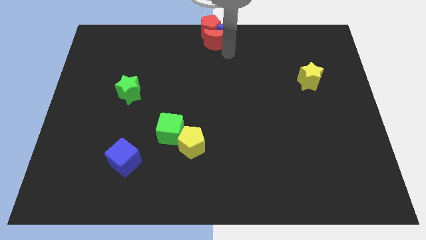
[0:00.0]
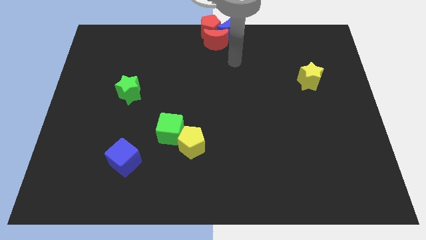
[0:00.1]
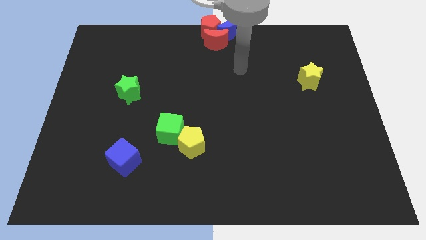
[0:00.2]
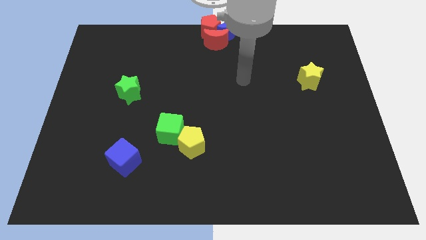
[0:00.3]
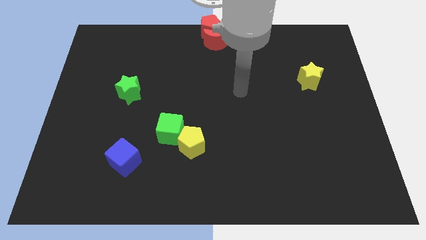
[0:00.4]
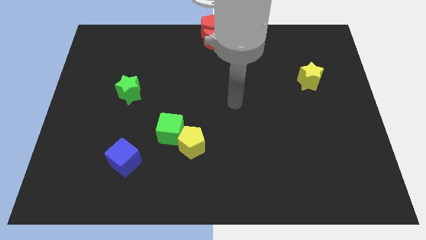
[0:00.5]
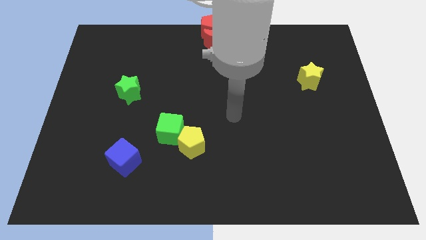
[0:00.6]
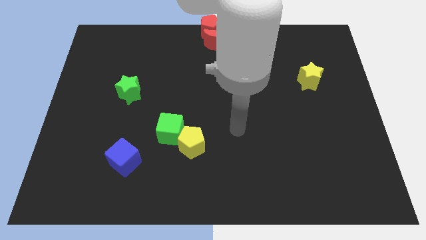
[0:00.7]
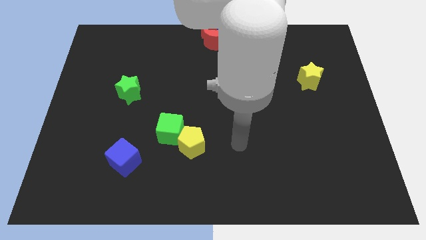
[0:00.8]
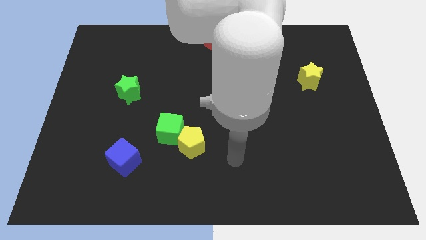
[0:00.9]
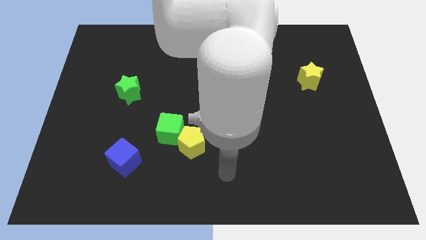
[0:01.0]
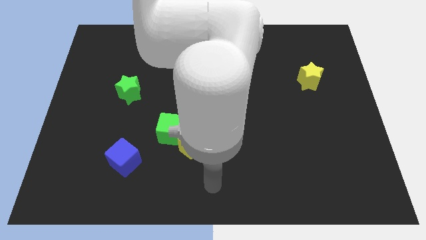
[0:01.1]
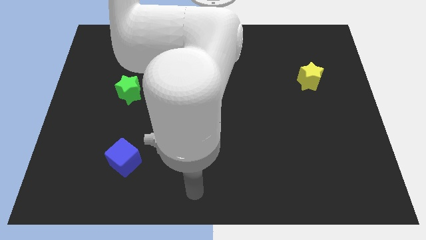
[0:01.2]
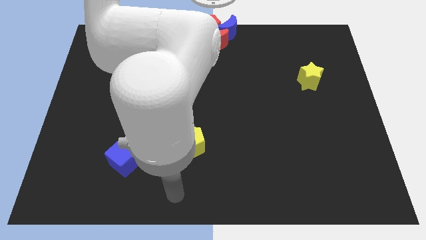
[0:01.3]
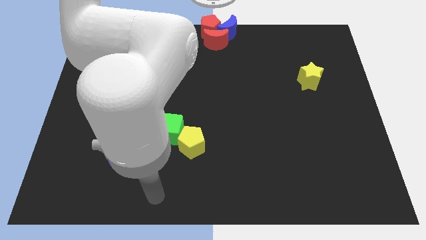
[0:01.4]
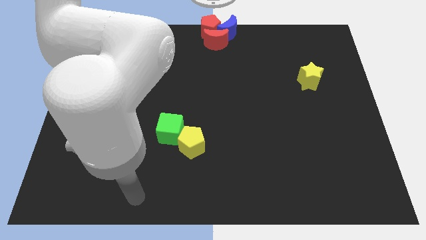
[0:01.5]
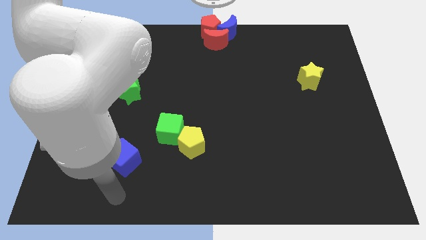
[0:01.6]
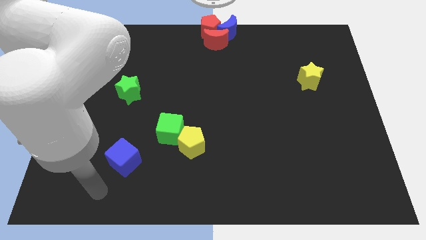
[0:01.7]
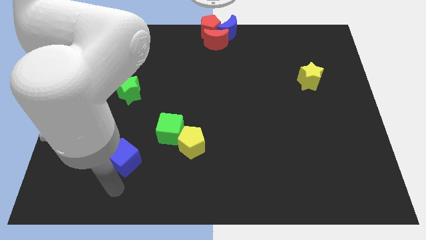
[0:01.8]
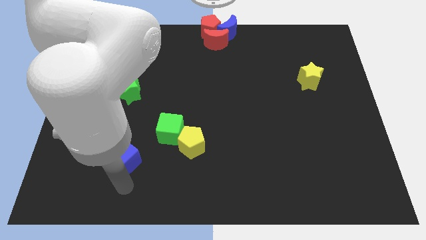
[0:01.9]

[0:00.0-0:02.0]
point your arm at the bottom side of the blue cube

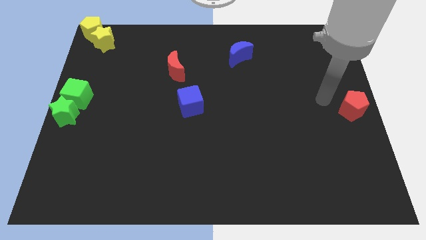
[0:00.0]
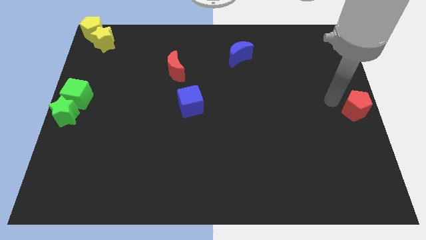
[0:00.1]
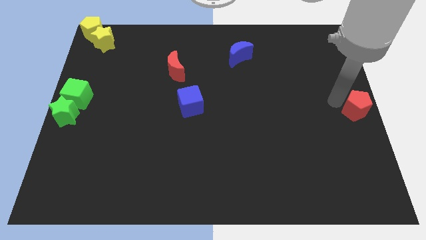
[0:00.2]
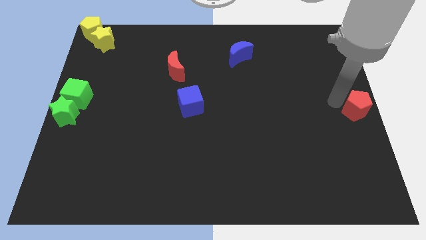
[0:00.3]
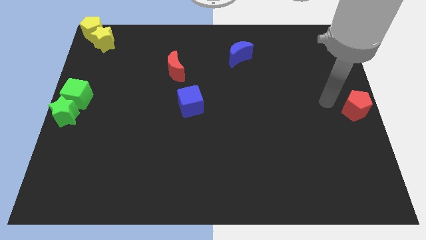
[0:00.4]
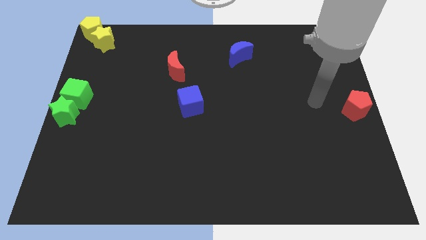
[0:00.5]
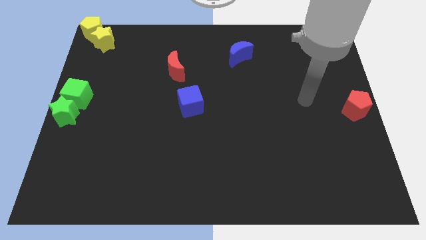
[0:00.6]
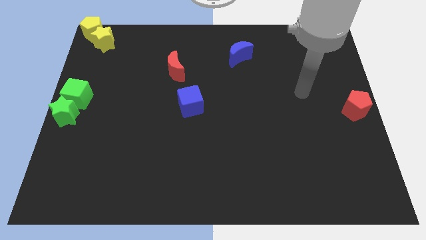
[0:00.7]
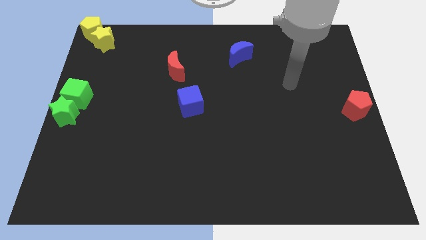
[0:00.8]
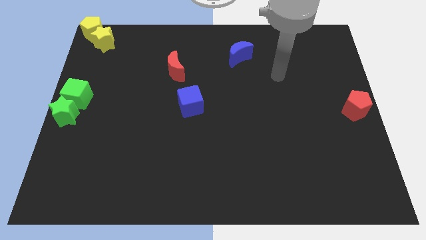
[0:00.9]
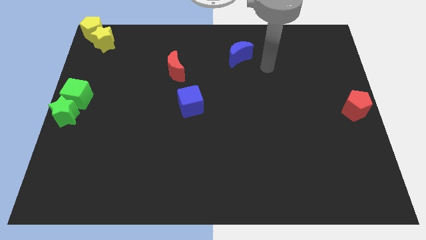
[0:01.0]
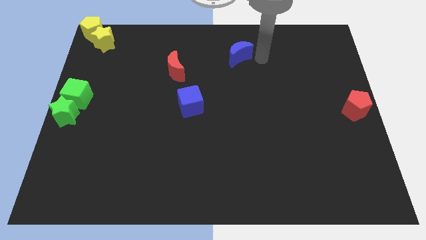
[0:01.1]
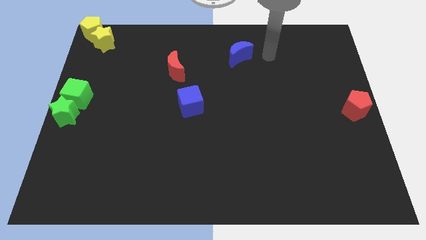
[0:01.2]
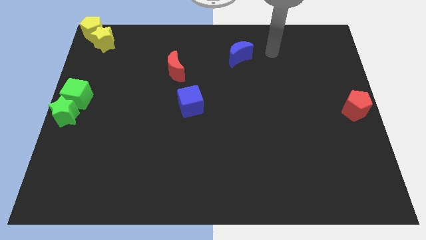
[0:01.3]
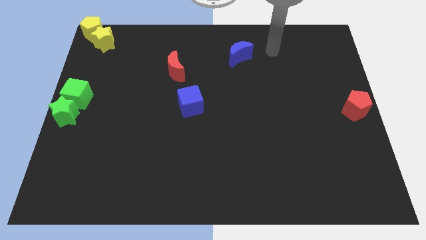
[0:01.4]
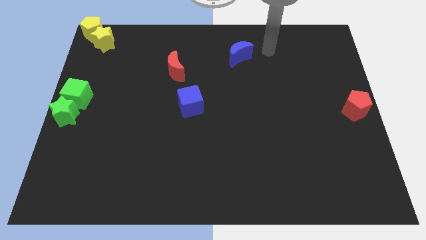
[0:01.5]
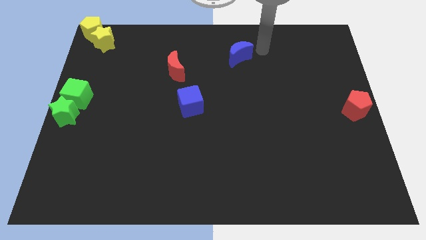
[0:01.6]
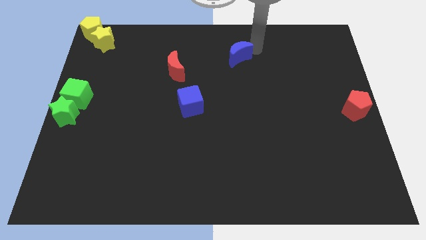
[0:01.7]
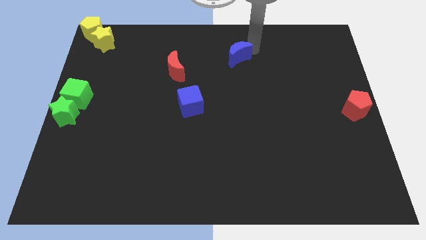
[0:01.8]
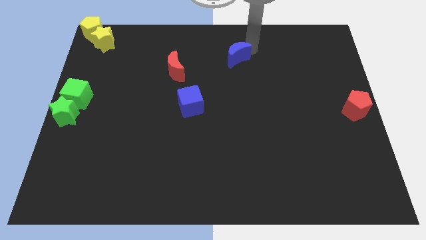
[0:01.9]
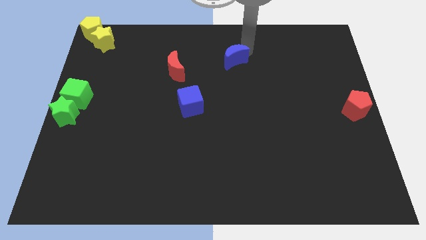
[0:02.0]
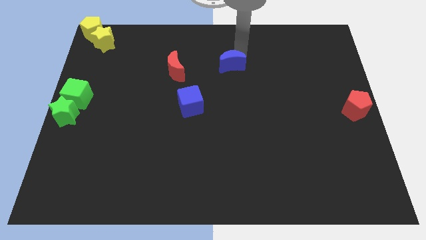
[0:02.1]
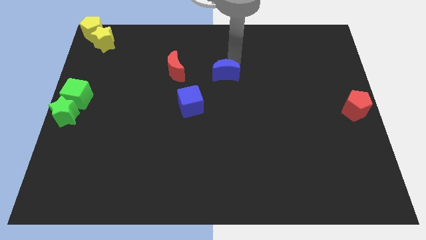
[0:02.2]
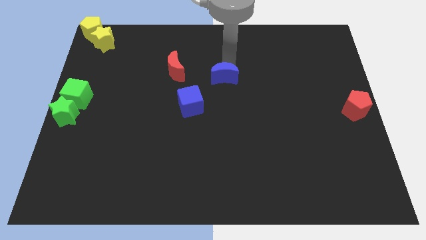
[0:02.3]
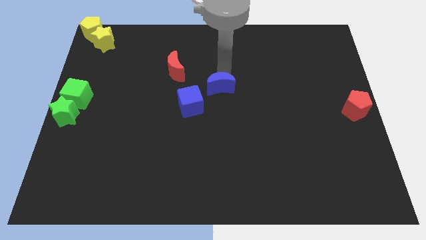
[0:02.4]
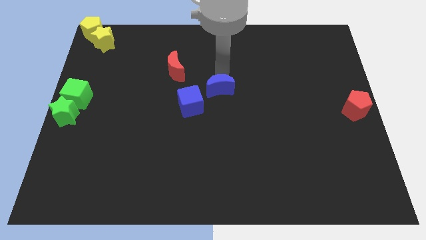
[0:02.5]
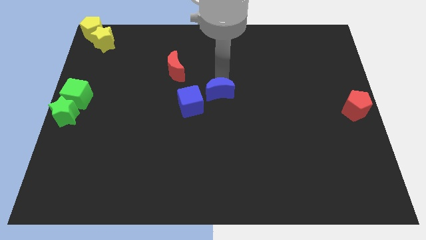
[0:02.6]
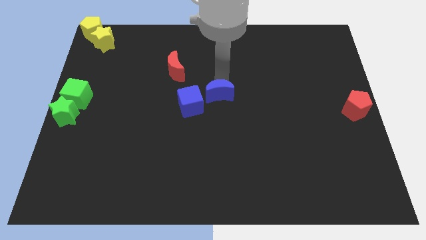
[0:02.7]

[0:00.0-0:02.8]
place the blue moon right to the blue cube

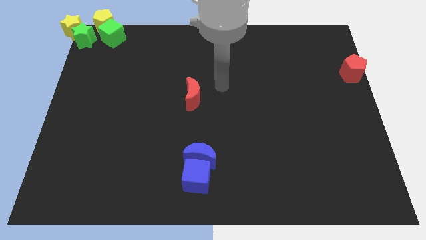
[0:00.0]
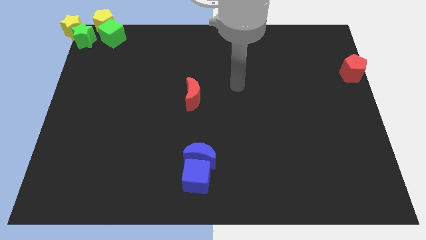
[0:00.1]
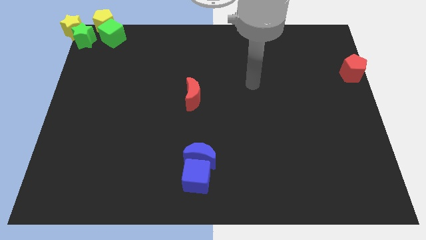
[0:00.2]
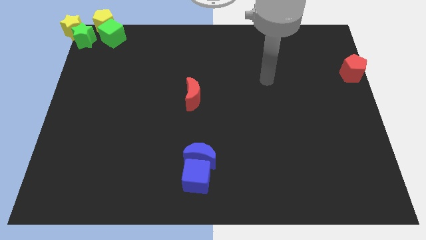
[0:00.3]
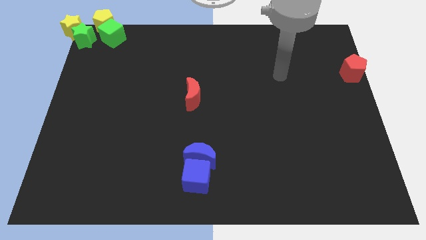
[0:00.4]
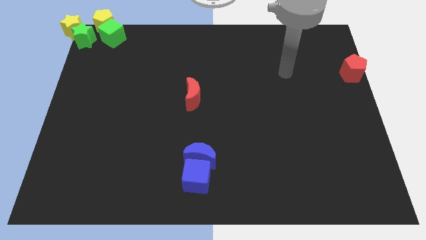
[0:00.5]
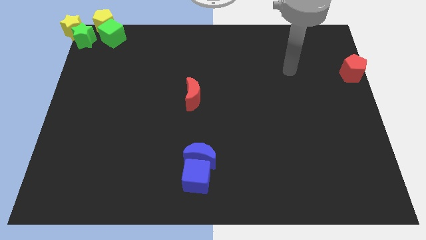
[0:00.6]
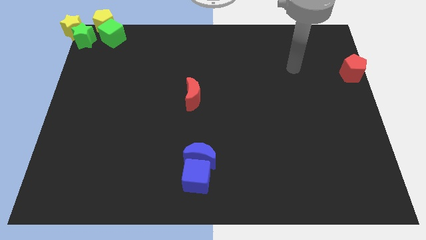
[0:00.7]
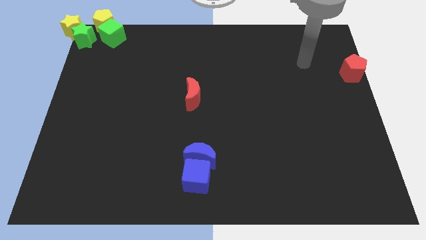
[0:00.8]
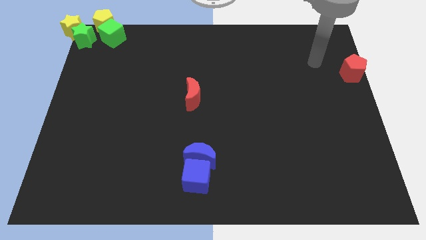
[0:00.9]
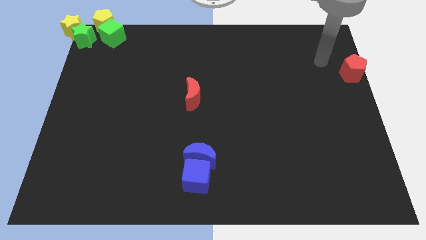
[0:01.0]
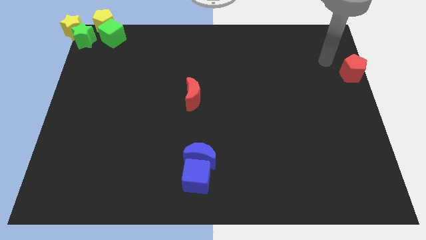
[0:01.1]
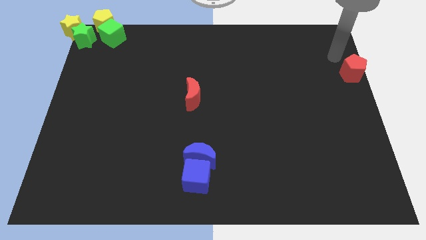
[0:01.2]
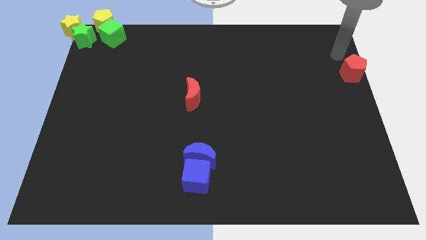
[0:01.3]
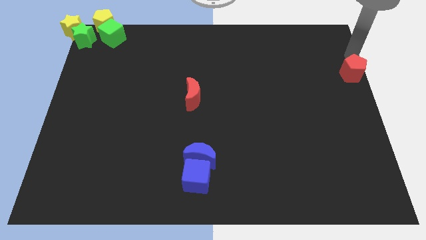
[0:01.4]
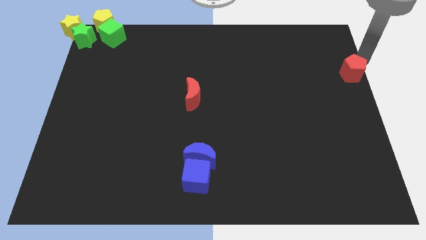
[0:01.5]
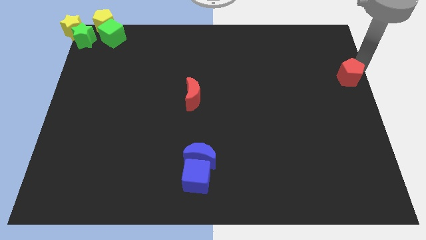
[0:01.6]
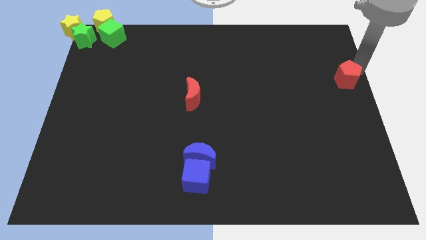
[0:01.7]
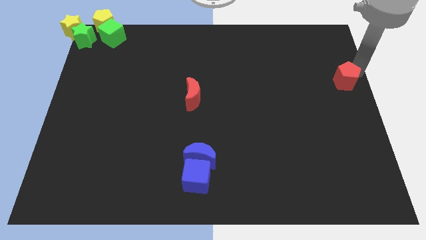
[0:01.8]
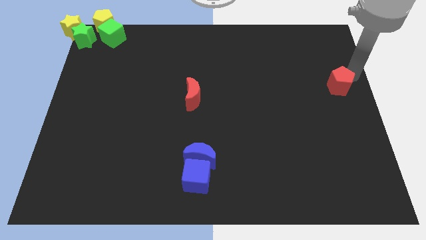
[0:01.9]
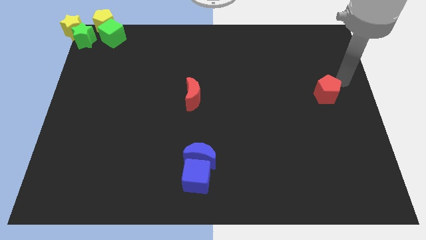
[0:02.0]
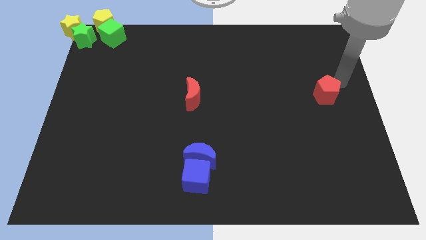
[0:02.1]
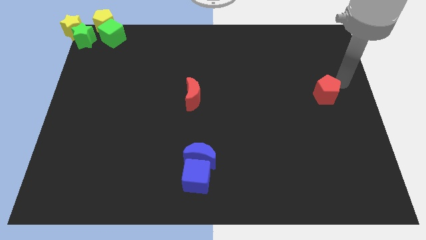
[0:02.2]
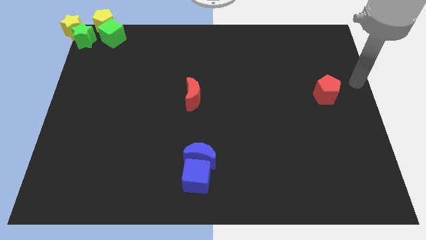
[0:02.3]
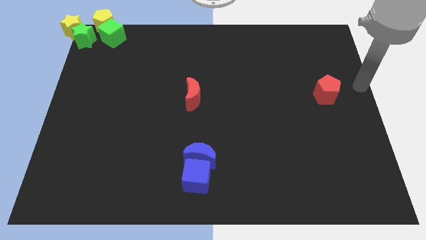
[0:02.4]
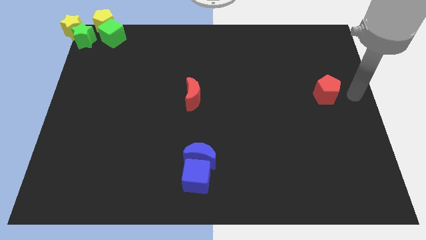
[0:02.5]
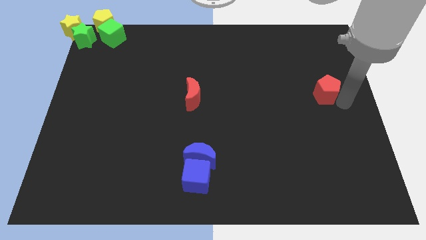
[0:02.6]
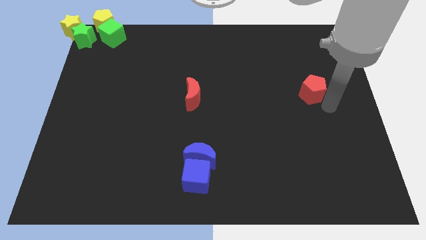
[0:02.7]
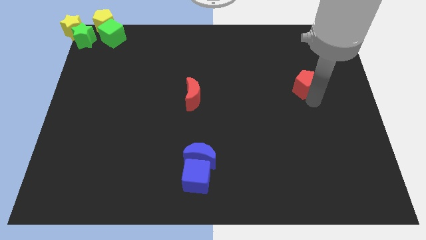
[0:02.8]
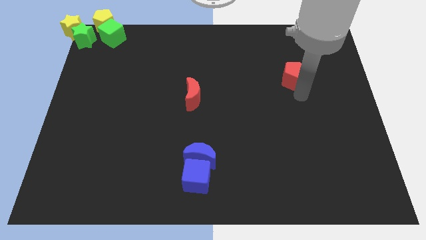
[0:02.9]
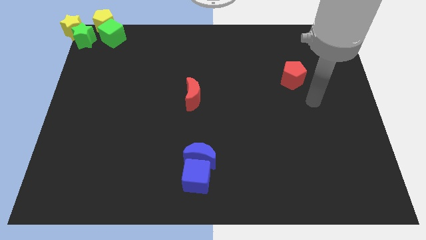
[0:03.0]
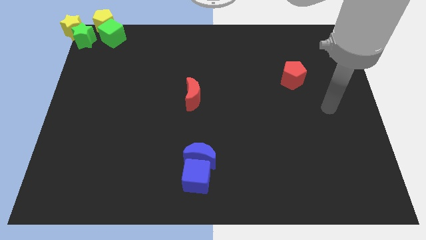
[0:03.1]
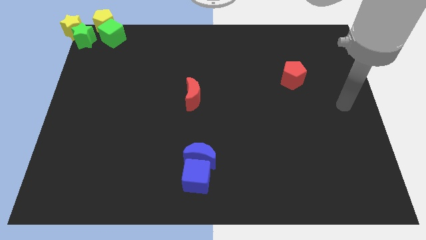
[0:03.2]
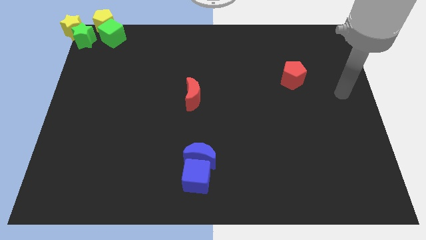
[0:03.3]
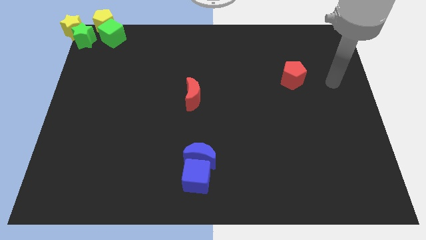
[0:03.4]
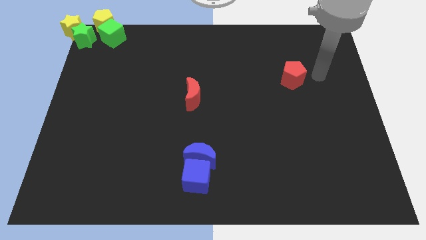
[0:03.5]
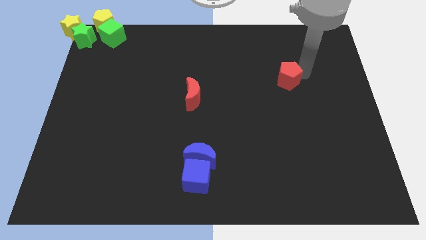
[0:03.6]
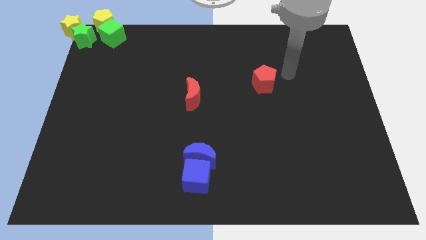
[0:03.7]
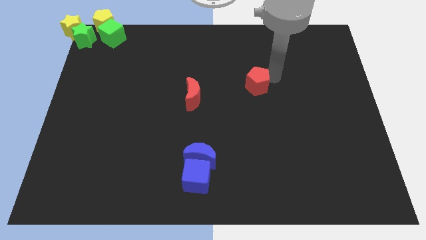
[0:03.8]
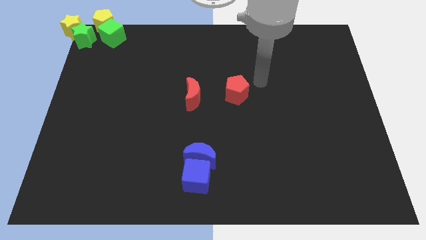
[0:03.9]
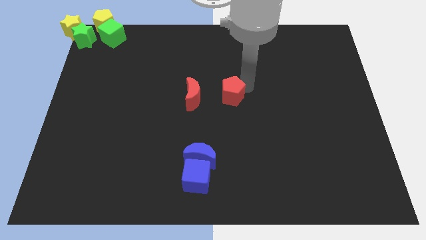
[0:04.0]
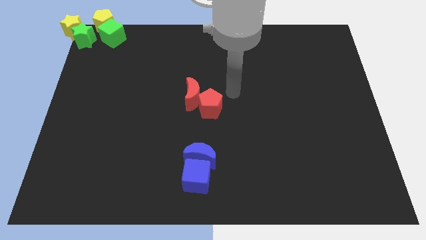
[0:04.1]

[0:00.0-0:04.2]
move the red pentagon parallel to the red crescent
